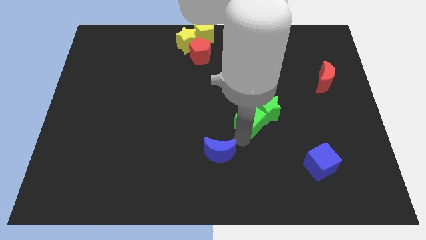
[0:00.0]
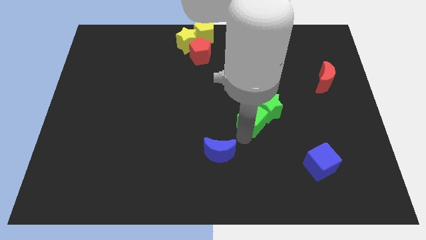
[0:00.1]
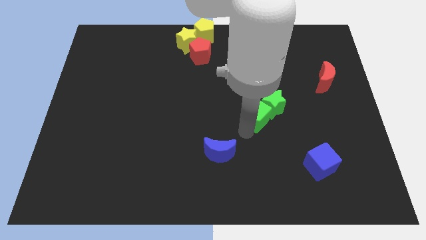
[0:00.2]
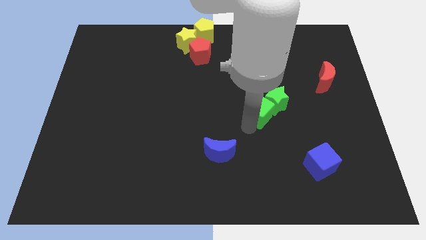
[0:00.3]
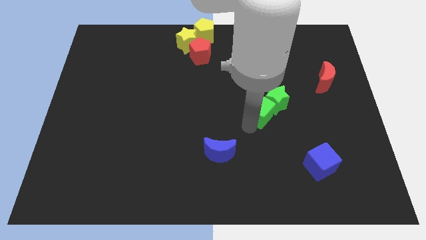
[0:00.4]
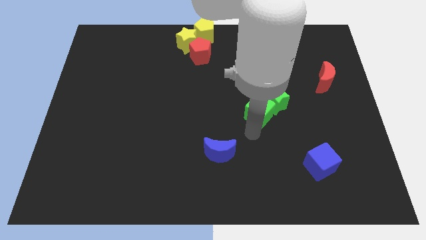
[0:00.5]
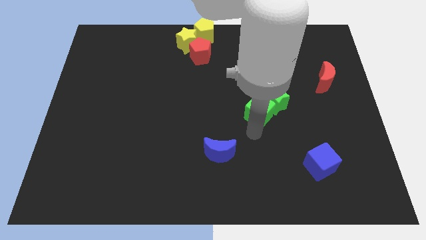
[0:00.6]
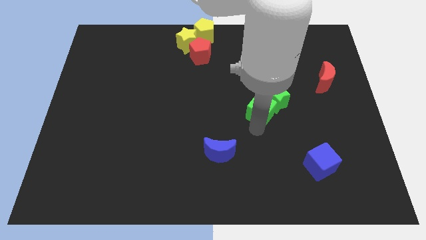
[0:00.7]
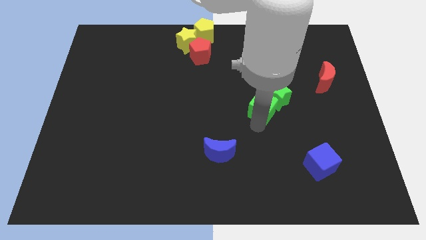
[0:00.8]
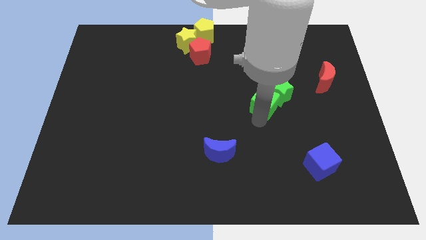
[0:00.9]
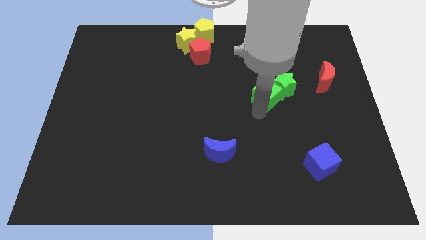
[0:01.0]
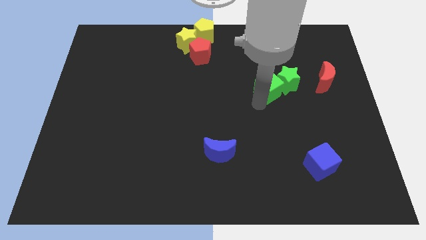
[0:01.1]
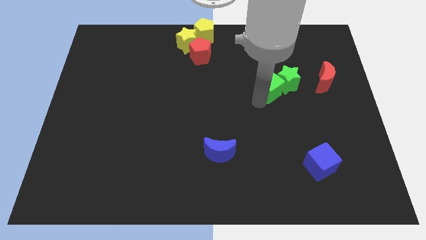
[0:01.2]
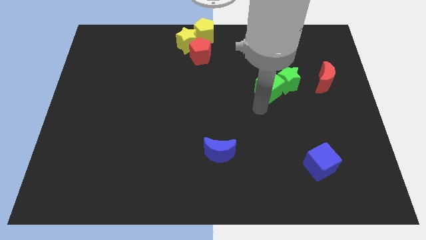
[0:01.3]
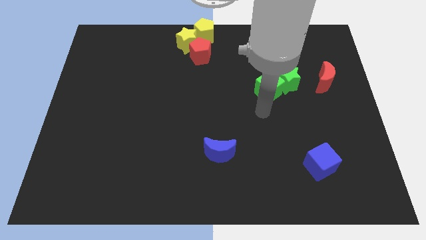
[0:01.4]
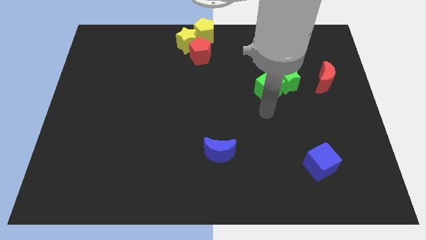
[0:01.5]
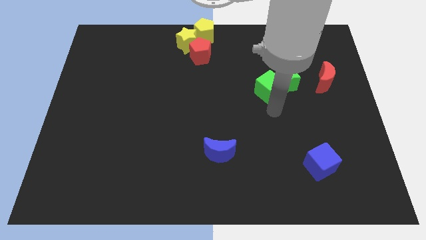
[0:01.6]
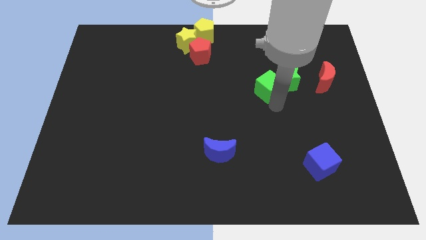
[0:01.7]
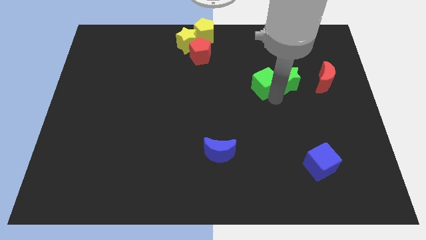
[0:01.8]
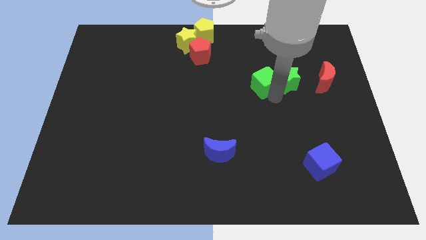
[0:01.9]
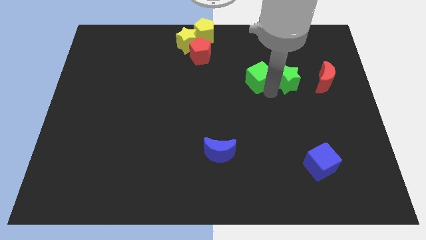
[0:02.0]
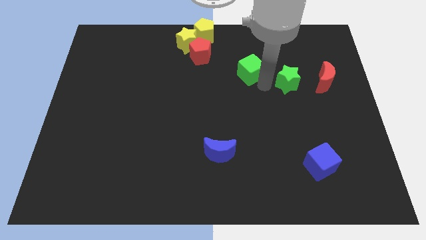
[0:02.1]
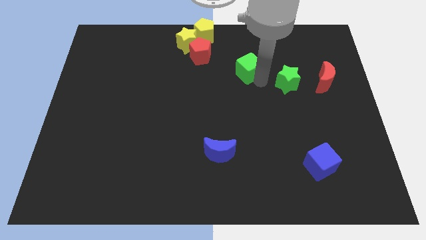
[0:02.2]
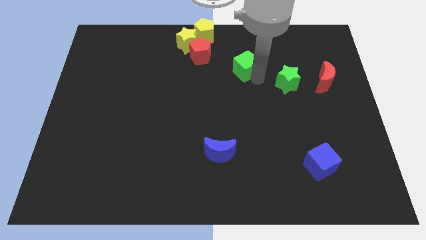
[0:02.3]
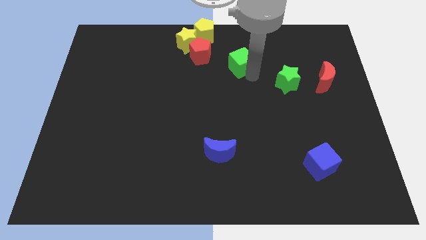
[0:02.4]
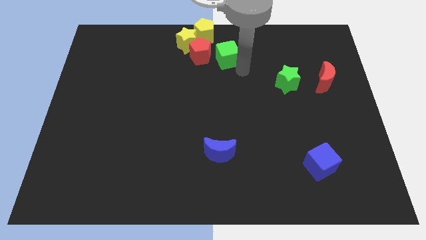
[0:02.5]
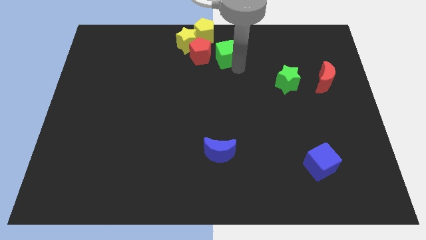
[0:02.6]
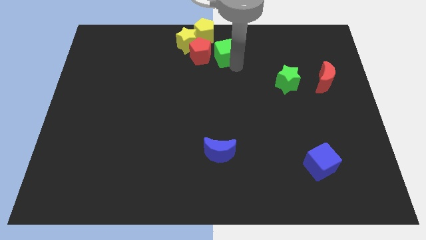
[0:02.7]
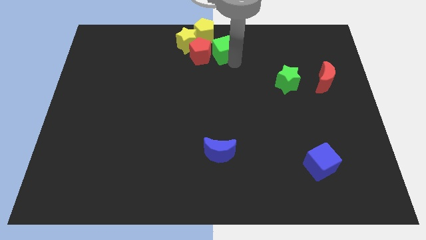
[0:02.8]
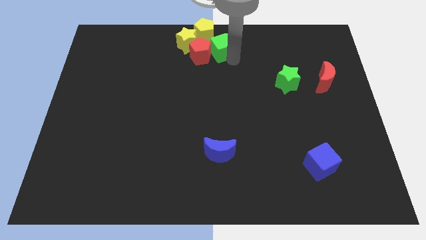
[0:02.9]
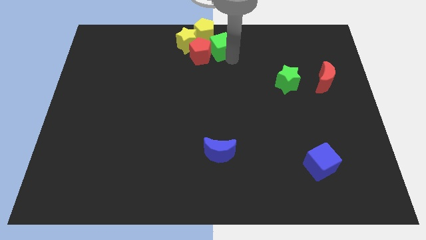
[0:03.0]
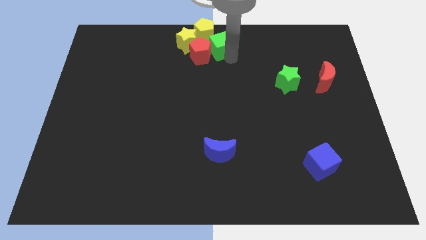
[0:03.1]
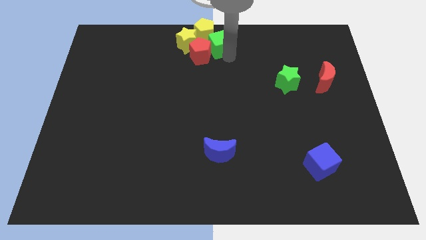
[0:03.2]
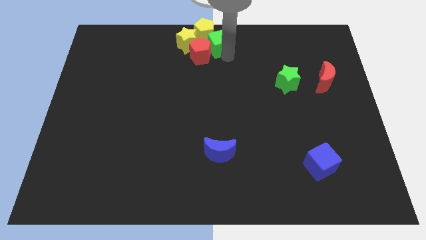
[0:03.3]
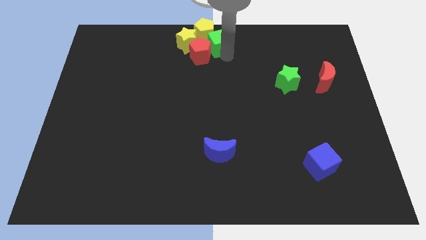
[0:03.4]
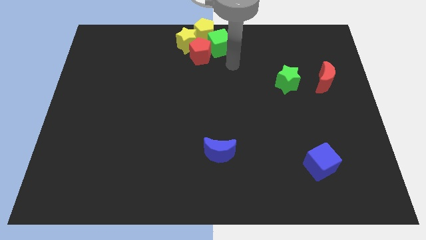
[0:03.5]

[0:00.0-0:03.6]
separate green cube from green star

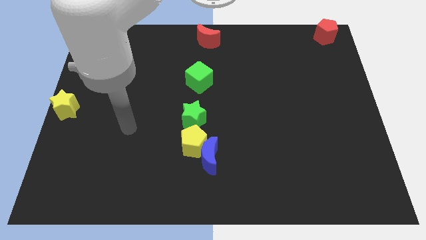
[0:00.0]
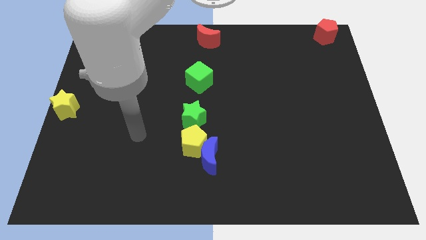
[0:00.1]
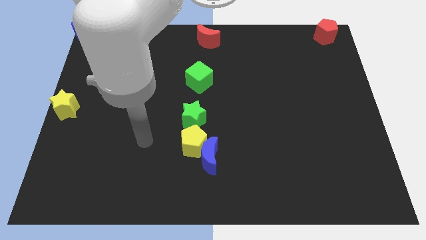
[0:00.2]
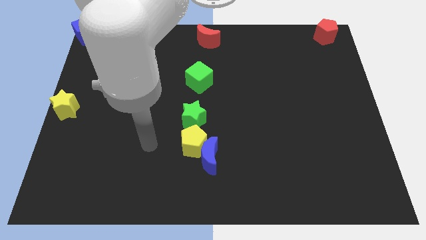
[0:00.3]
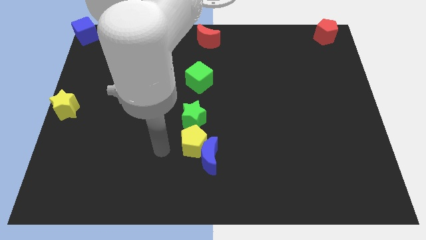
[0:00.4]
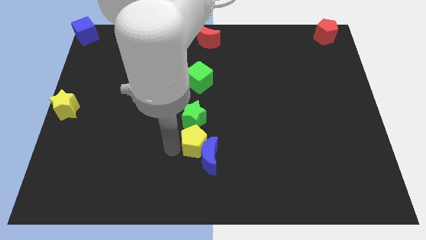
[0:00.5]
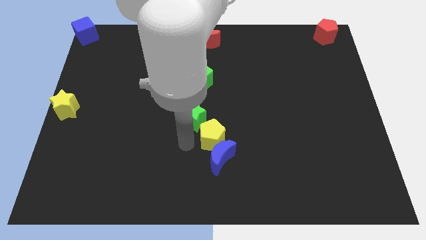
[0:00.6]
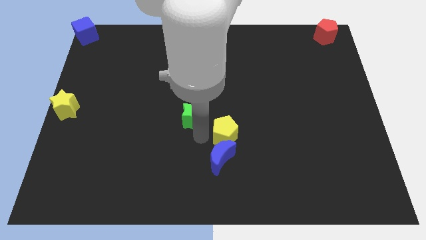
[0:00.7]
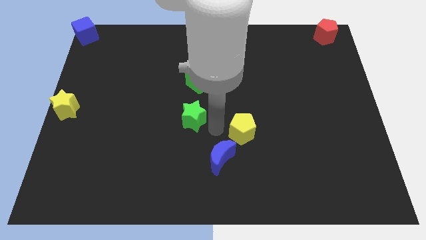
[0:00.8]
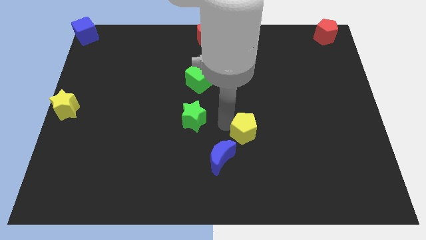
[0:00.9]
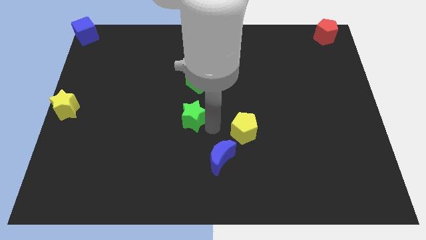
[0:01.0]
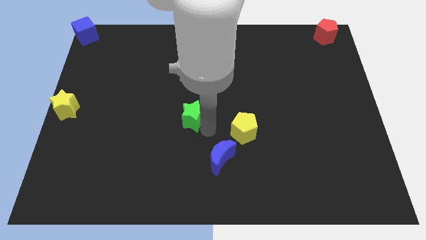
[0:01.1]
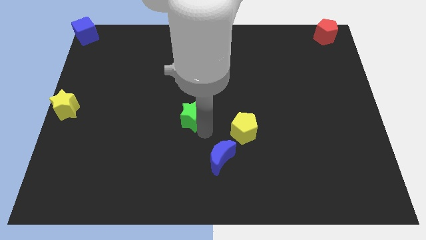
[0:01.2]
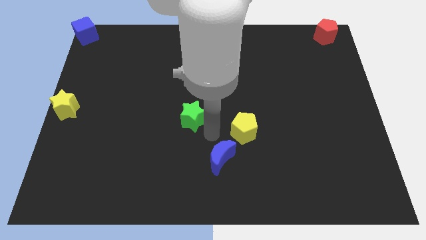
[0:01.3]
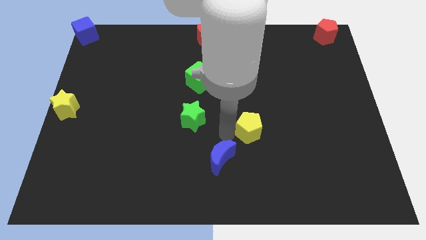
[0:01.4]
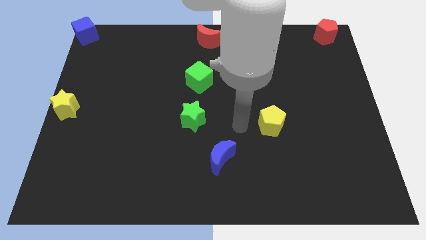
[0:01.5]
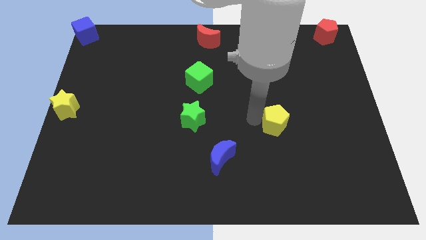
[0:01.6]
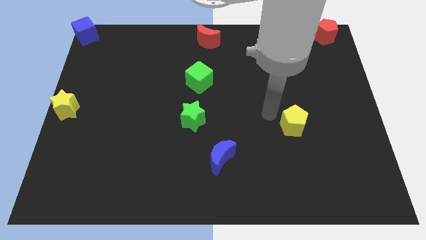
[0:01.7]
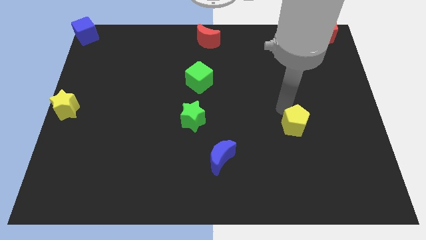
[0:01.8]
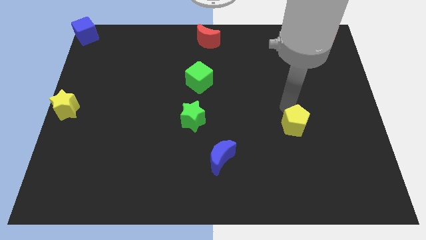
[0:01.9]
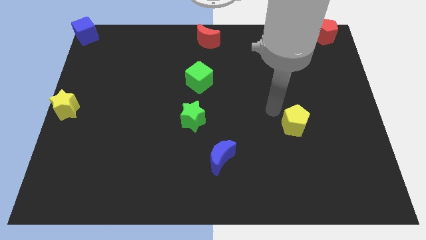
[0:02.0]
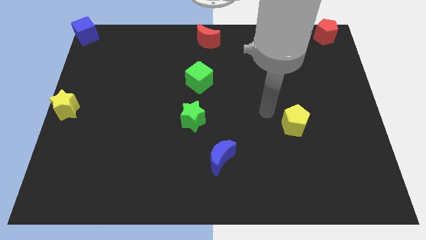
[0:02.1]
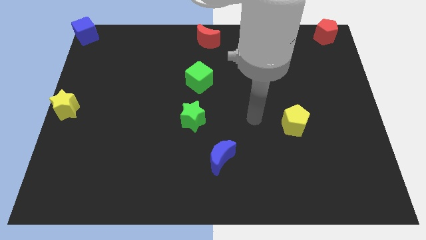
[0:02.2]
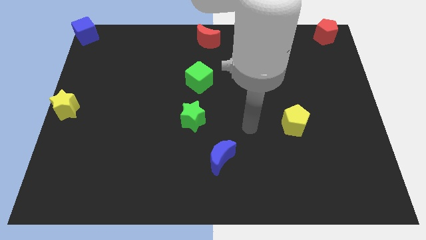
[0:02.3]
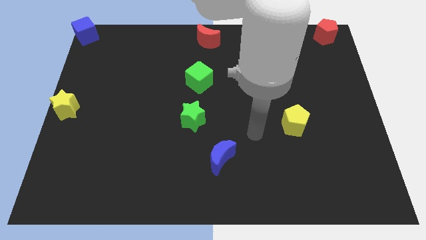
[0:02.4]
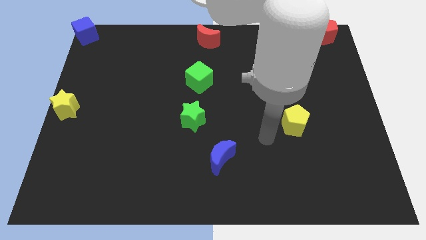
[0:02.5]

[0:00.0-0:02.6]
move the yellow pentagon away from the green star and blue moon

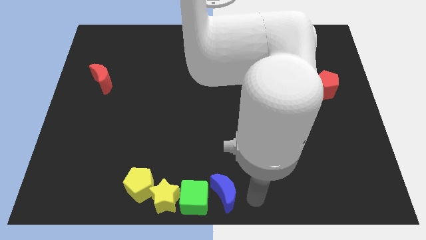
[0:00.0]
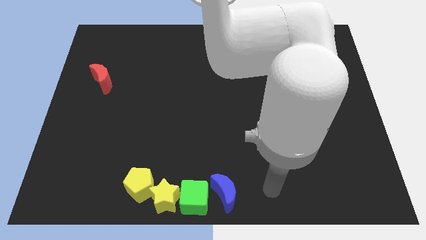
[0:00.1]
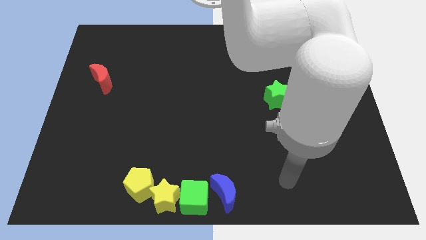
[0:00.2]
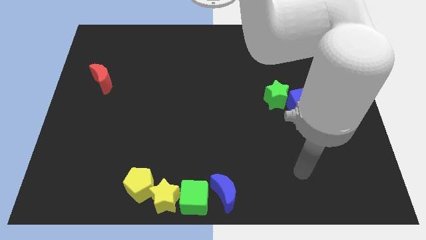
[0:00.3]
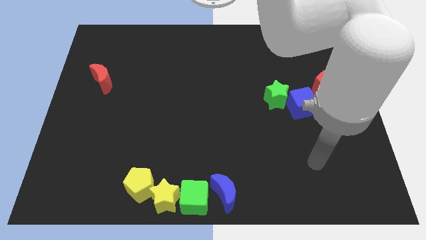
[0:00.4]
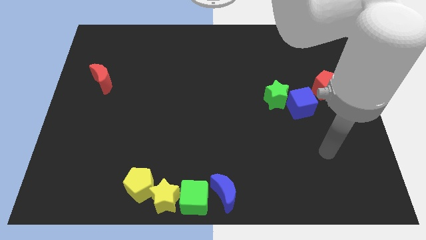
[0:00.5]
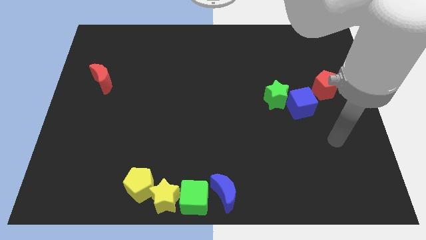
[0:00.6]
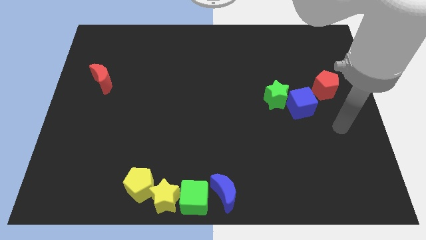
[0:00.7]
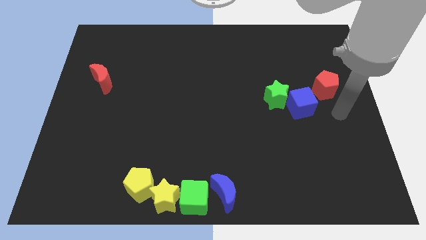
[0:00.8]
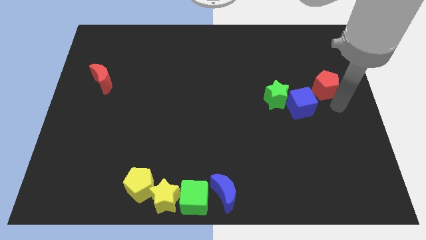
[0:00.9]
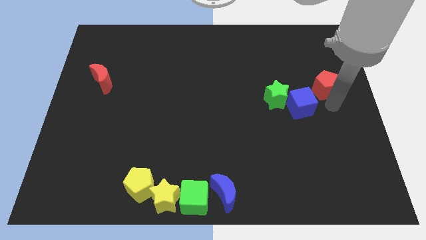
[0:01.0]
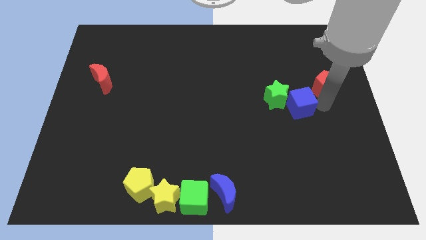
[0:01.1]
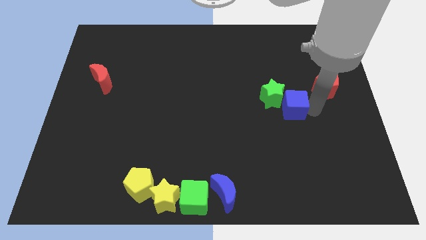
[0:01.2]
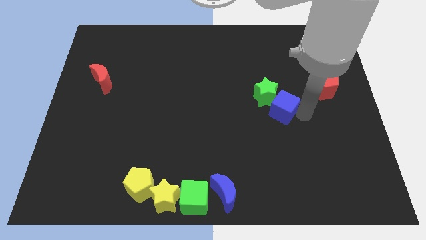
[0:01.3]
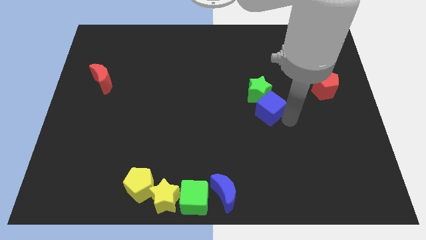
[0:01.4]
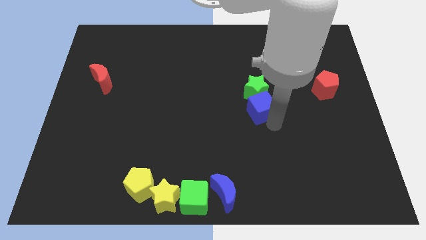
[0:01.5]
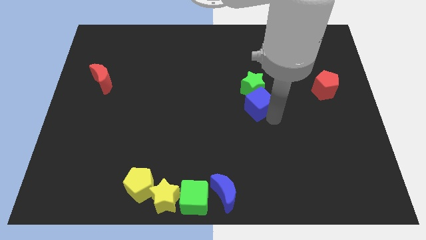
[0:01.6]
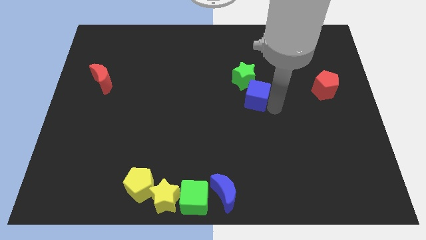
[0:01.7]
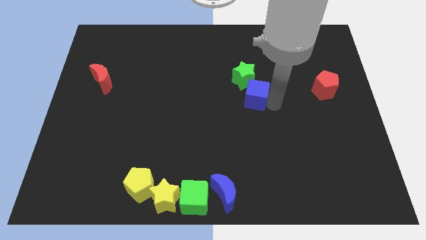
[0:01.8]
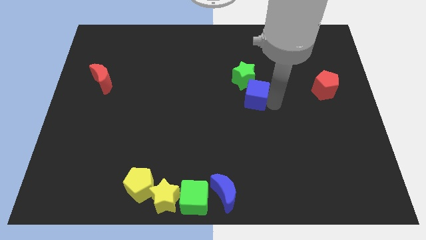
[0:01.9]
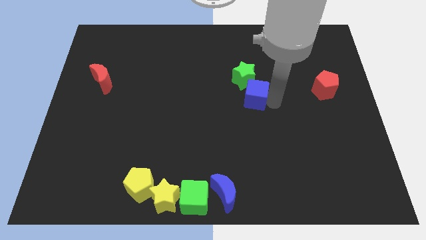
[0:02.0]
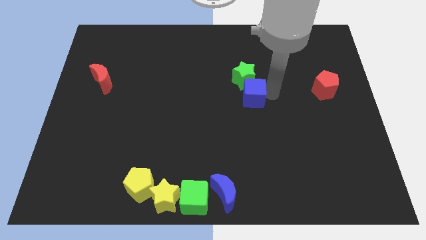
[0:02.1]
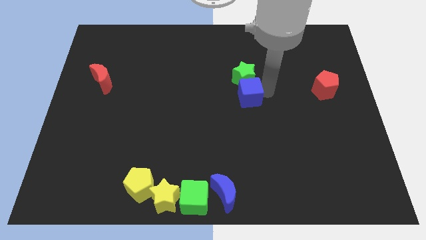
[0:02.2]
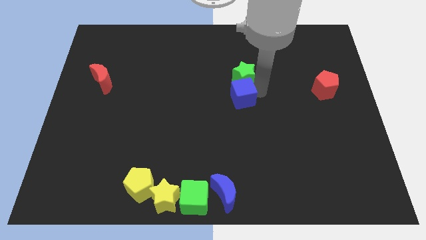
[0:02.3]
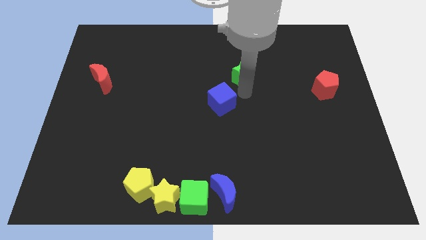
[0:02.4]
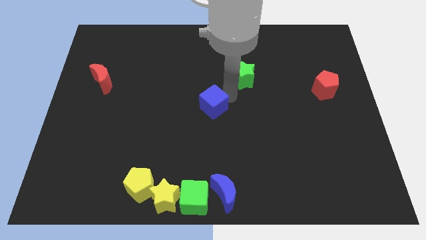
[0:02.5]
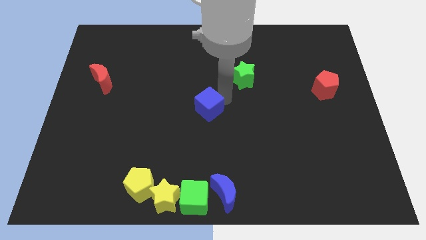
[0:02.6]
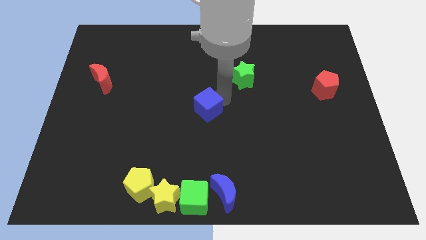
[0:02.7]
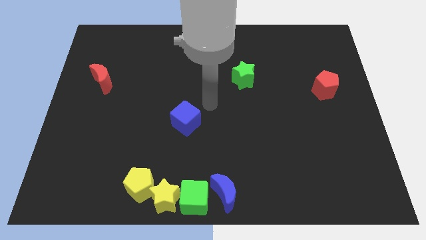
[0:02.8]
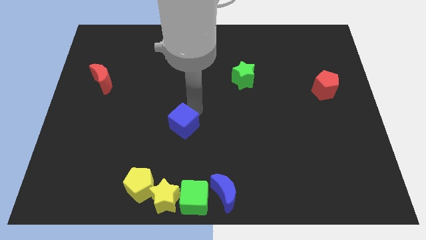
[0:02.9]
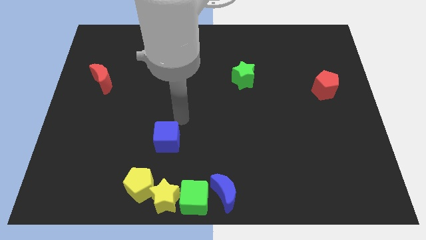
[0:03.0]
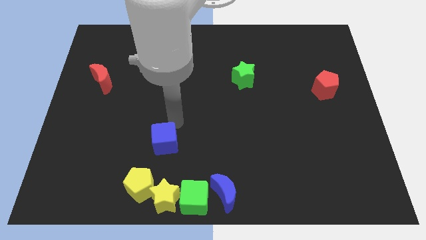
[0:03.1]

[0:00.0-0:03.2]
separate green star and the blue cube from the red pentagon
